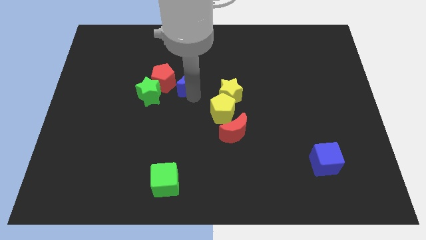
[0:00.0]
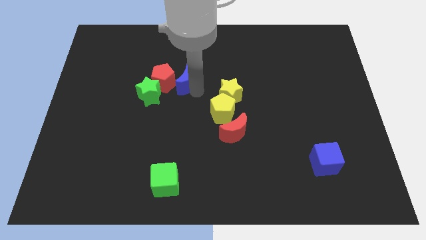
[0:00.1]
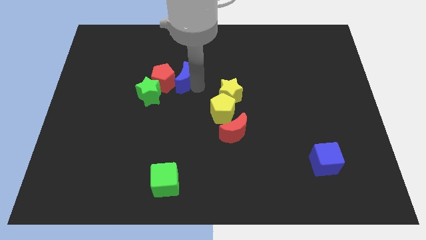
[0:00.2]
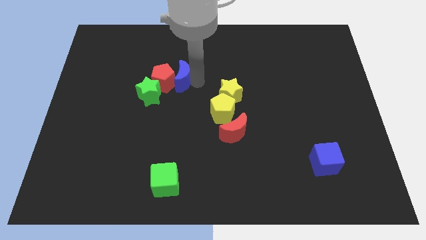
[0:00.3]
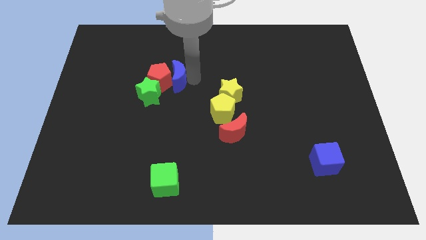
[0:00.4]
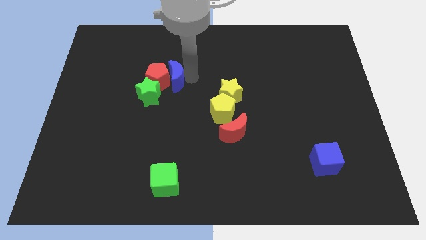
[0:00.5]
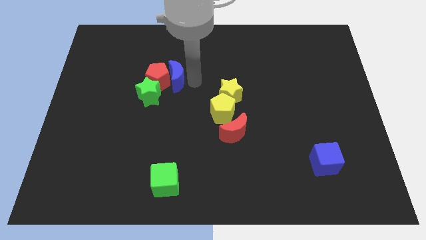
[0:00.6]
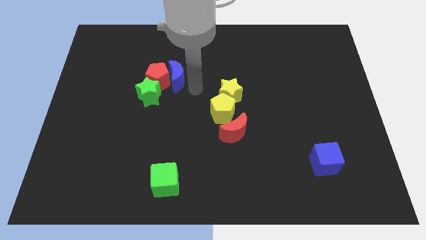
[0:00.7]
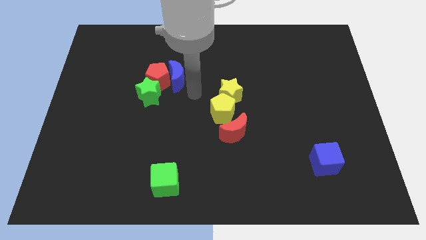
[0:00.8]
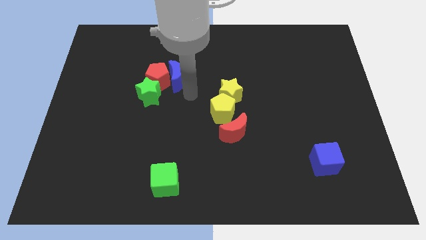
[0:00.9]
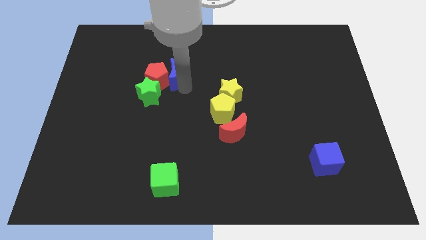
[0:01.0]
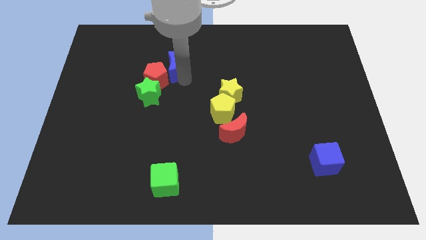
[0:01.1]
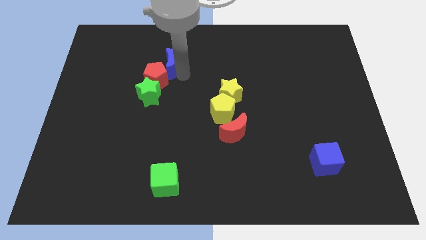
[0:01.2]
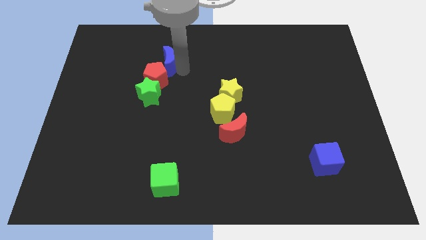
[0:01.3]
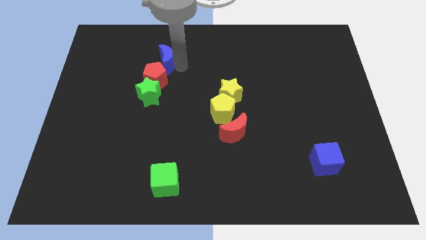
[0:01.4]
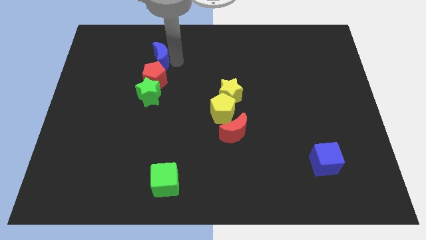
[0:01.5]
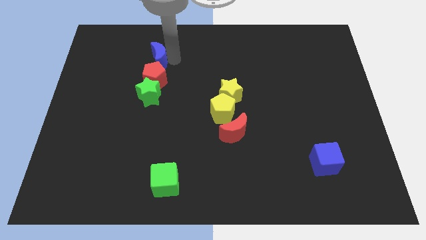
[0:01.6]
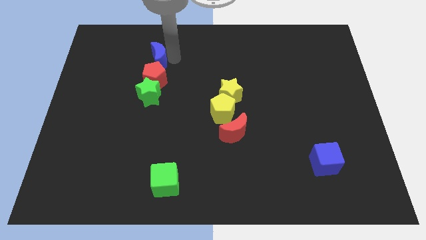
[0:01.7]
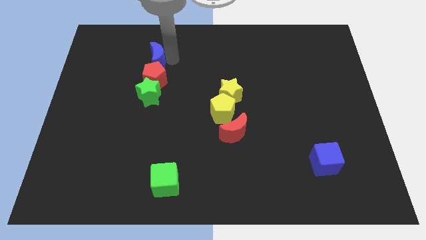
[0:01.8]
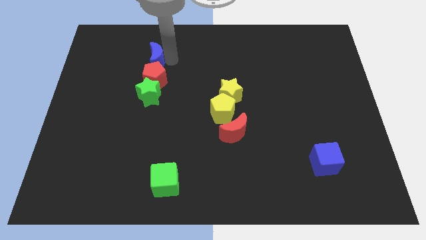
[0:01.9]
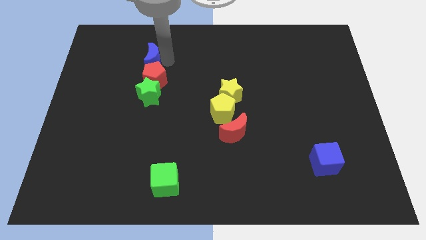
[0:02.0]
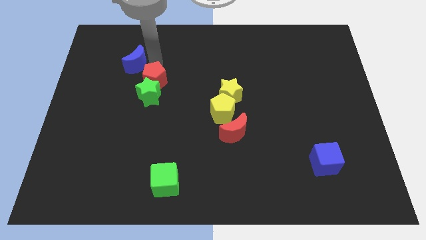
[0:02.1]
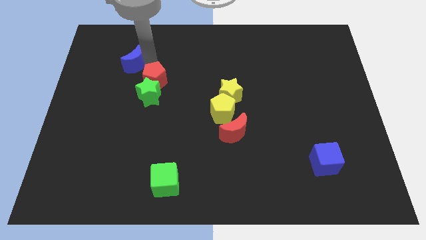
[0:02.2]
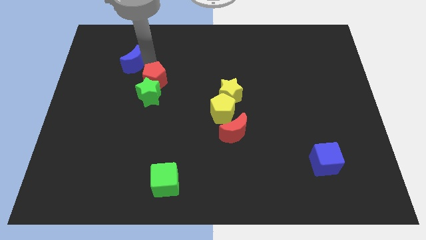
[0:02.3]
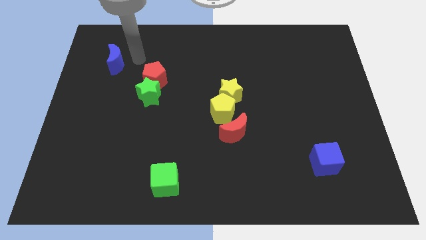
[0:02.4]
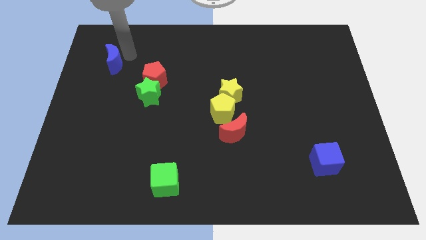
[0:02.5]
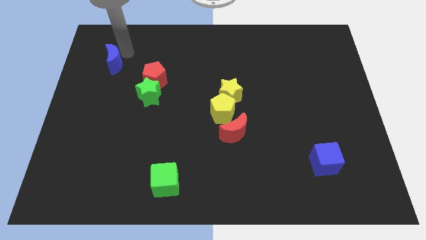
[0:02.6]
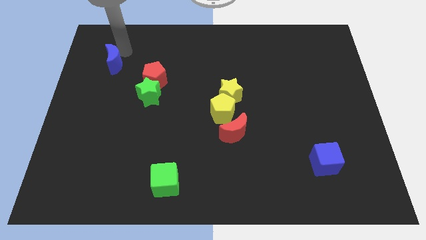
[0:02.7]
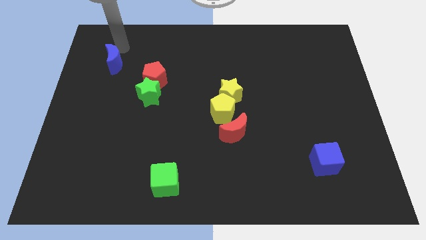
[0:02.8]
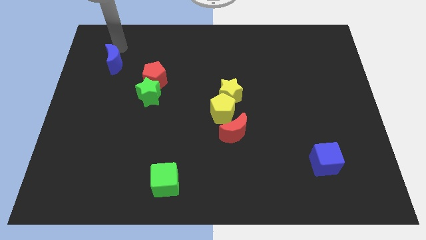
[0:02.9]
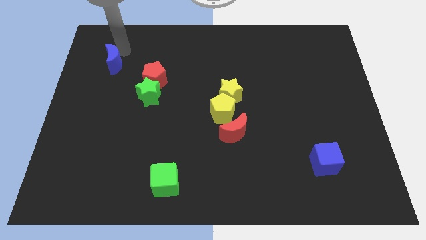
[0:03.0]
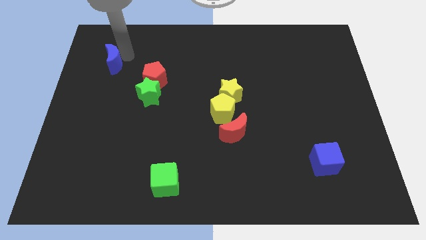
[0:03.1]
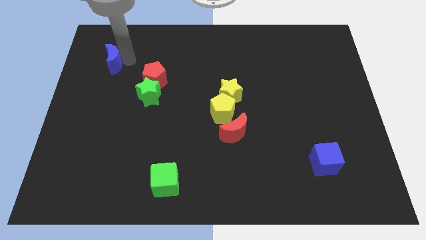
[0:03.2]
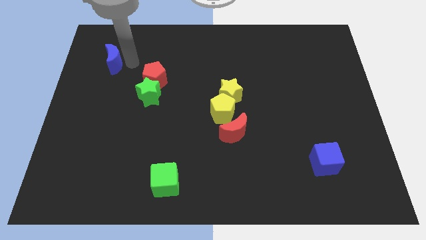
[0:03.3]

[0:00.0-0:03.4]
move the blue moon away from the red pentagon

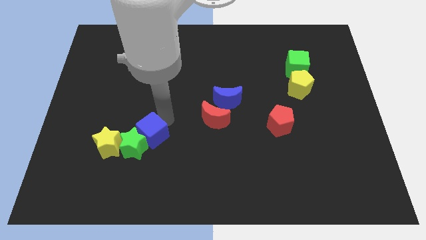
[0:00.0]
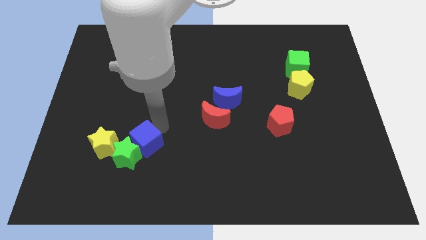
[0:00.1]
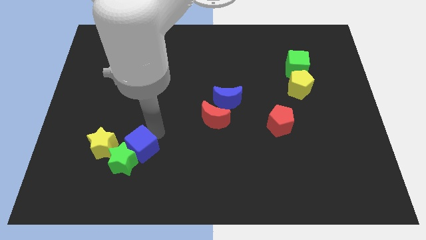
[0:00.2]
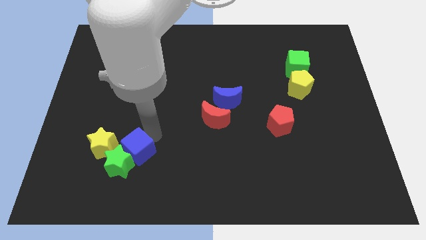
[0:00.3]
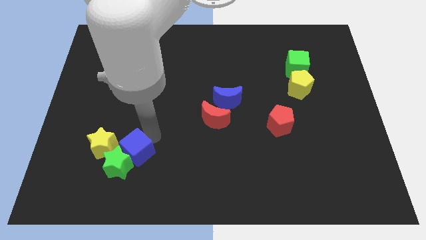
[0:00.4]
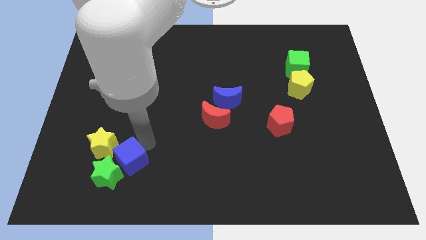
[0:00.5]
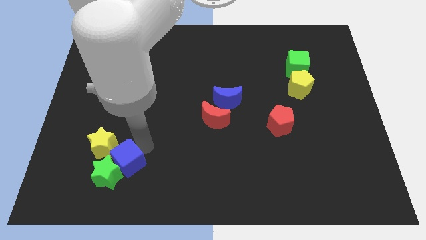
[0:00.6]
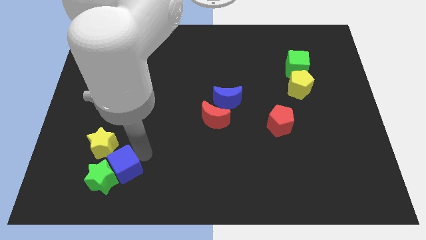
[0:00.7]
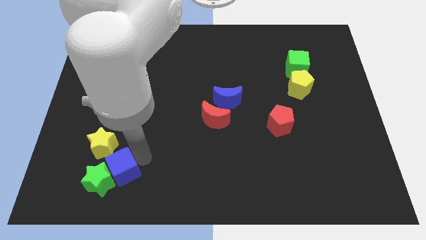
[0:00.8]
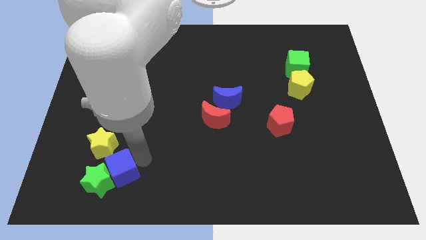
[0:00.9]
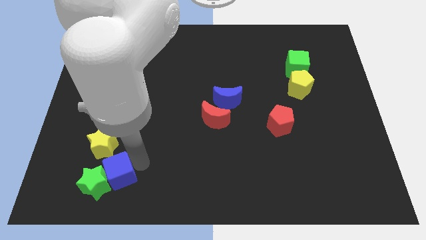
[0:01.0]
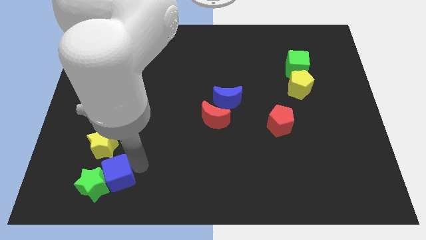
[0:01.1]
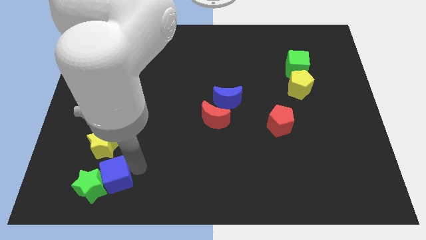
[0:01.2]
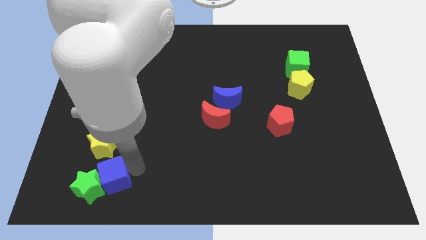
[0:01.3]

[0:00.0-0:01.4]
place blue cube below yellow star

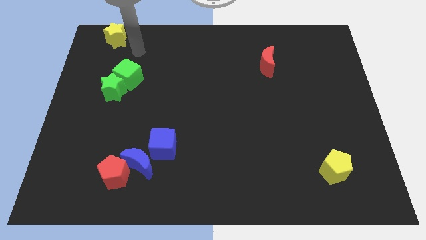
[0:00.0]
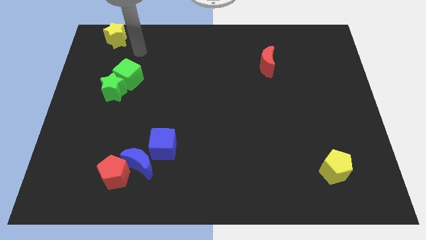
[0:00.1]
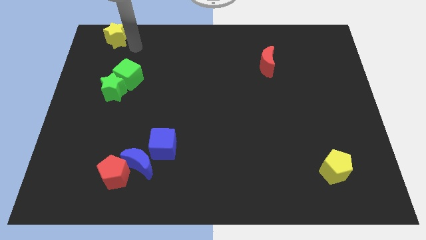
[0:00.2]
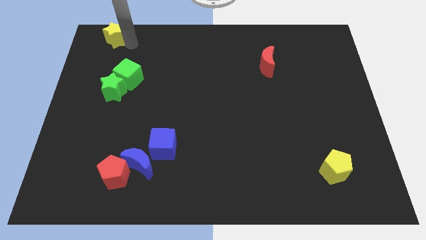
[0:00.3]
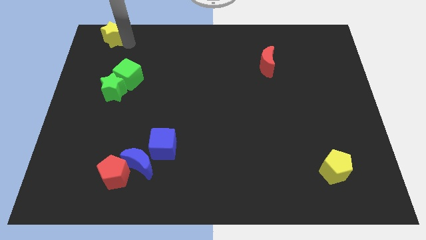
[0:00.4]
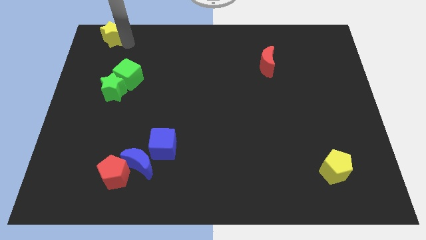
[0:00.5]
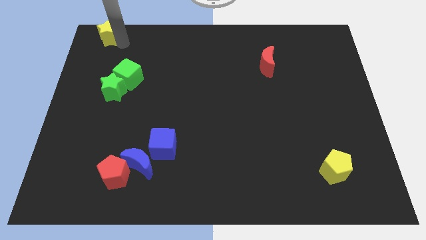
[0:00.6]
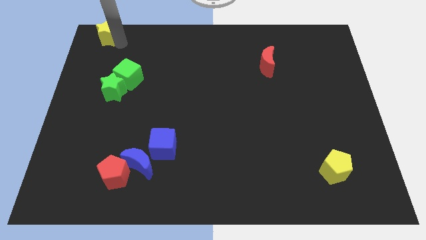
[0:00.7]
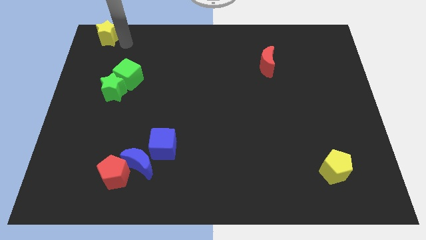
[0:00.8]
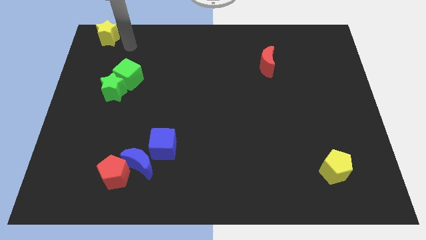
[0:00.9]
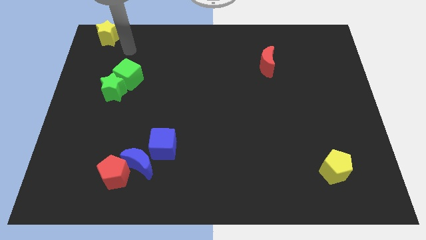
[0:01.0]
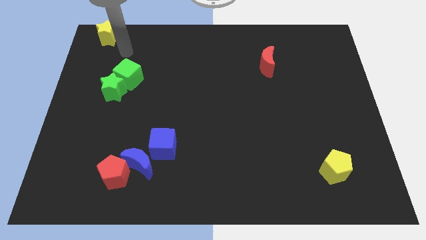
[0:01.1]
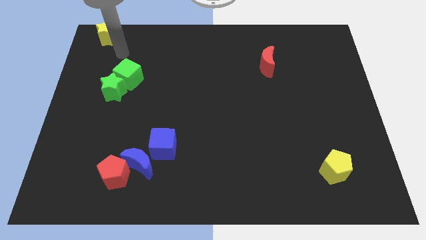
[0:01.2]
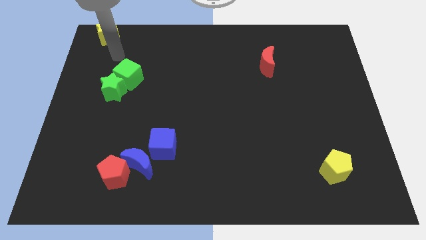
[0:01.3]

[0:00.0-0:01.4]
slightly move the yellow star to the left side of the board

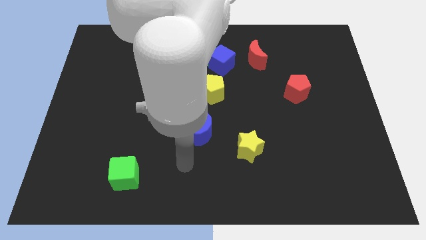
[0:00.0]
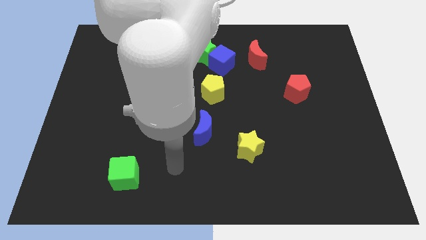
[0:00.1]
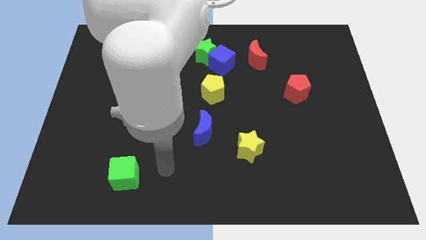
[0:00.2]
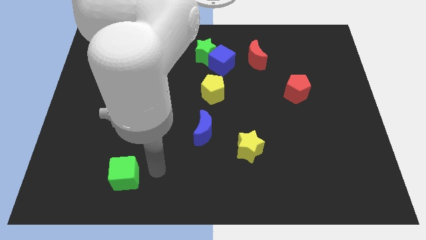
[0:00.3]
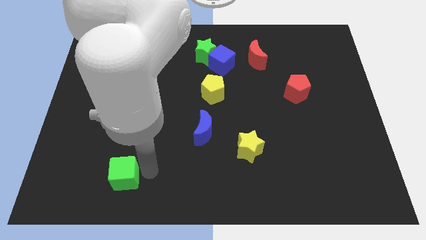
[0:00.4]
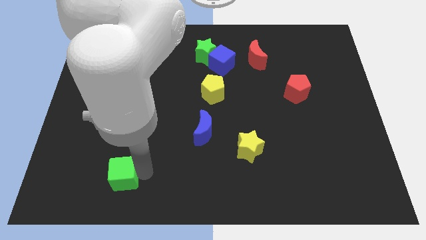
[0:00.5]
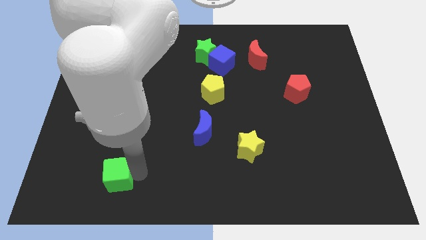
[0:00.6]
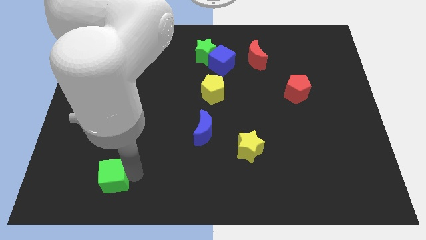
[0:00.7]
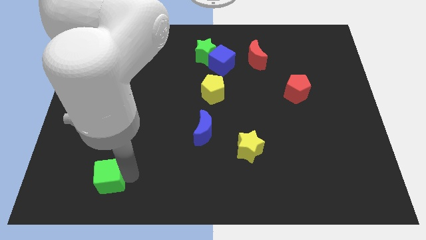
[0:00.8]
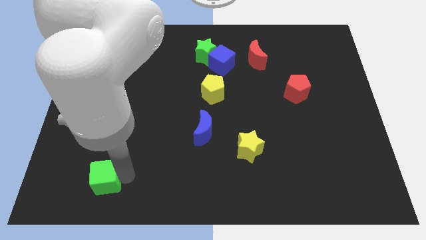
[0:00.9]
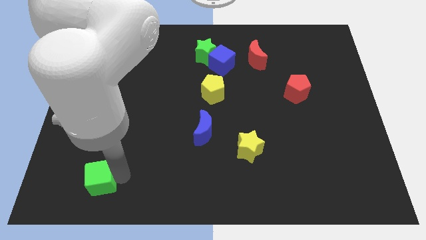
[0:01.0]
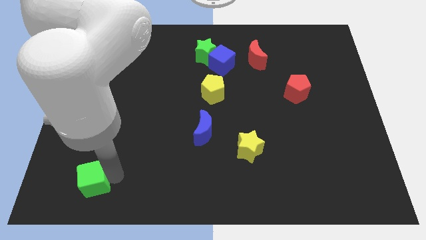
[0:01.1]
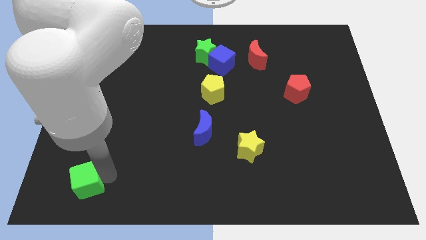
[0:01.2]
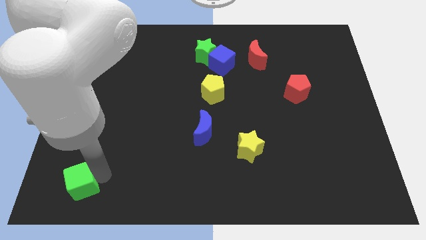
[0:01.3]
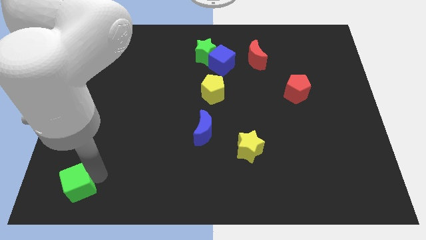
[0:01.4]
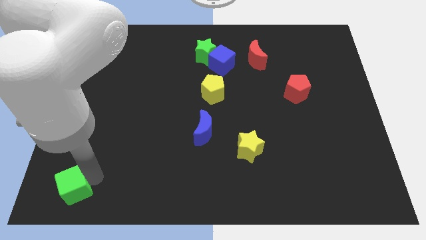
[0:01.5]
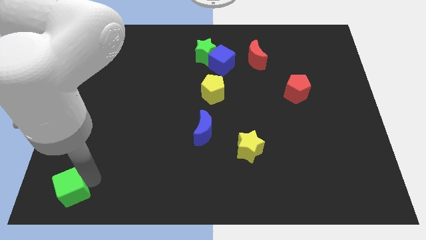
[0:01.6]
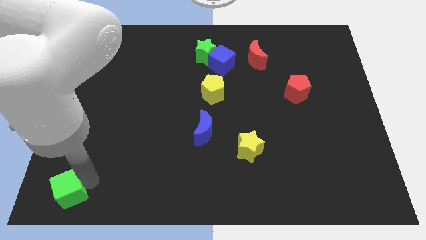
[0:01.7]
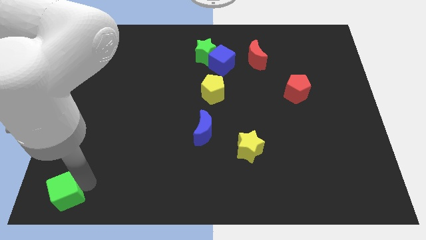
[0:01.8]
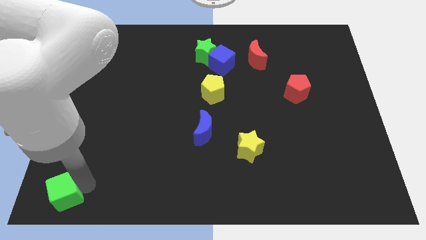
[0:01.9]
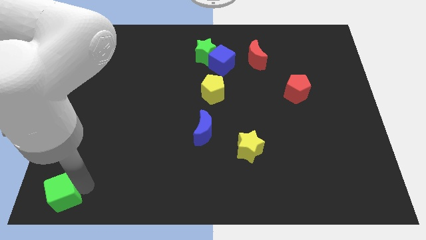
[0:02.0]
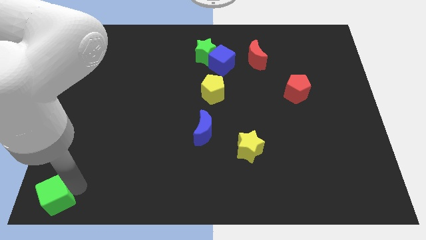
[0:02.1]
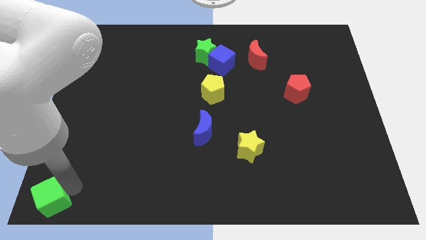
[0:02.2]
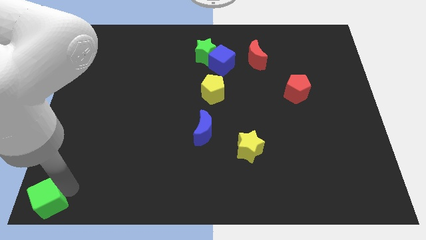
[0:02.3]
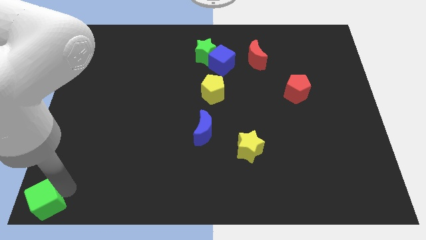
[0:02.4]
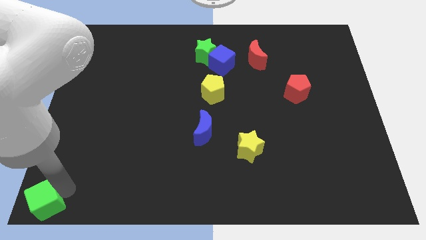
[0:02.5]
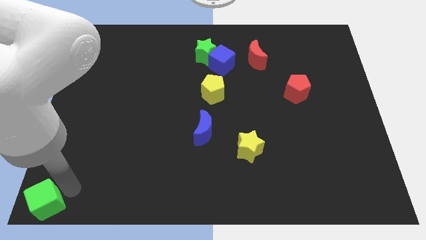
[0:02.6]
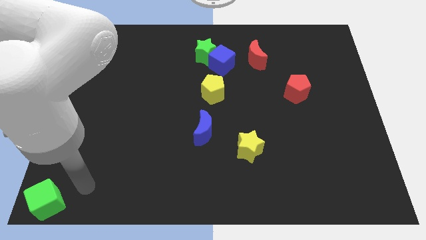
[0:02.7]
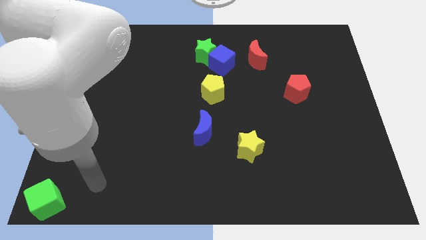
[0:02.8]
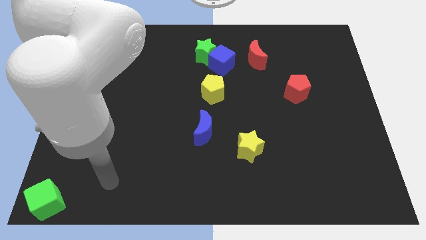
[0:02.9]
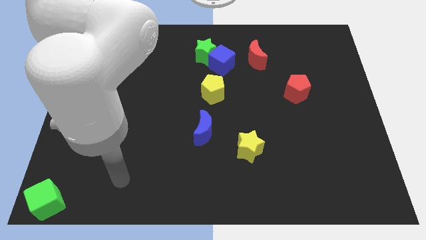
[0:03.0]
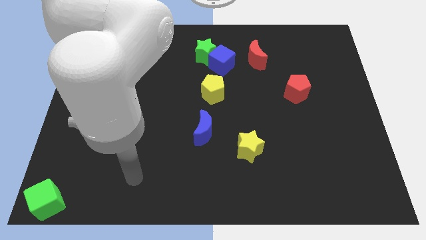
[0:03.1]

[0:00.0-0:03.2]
move the green cube to the bottom left of the board
